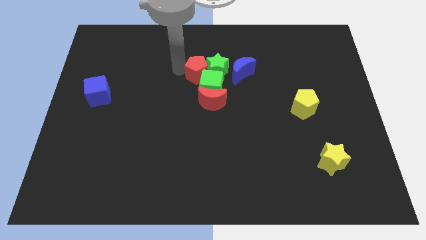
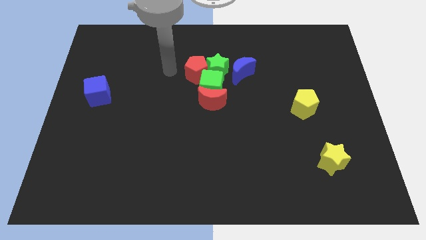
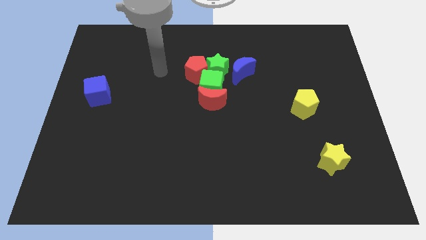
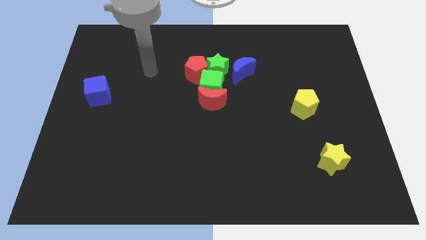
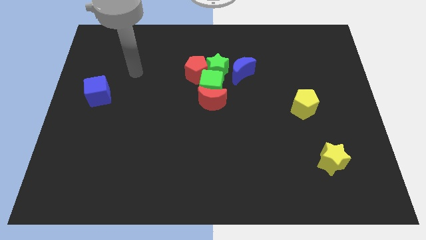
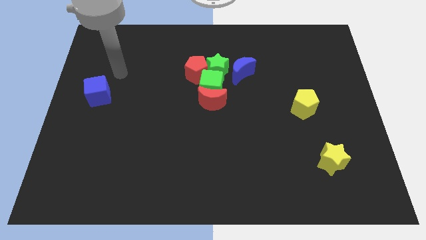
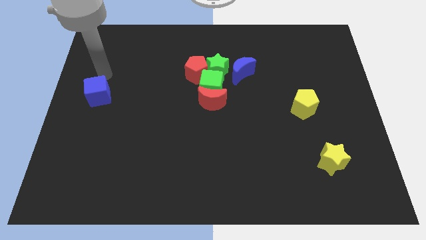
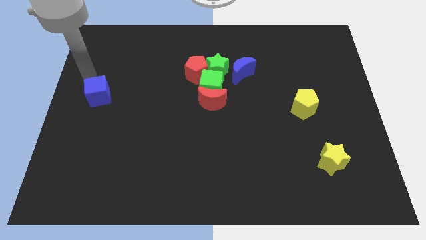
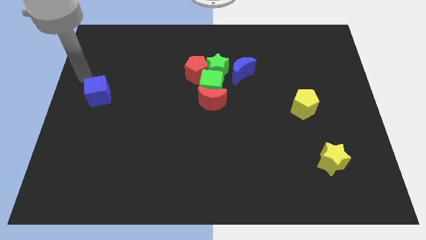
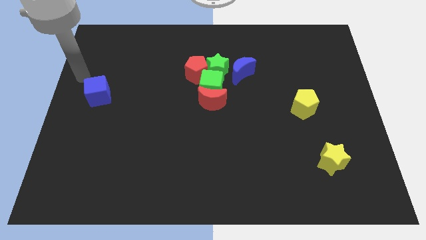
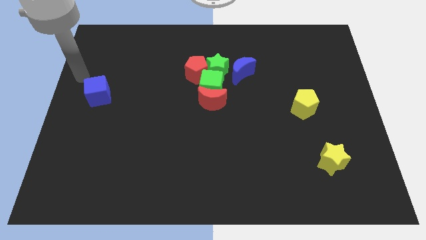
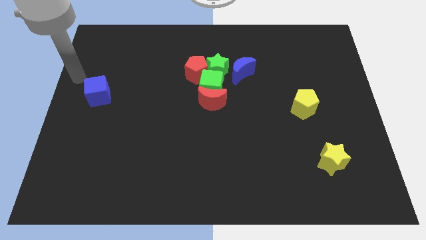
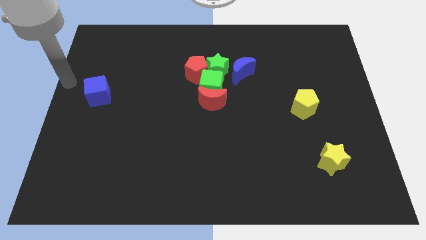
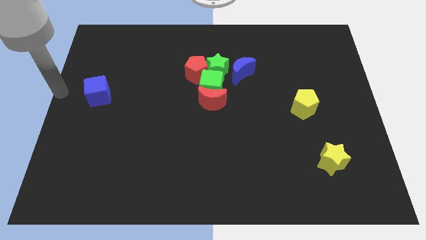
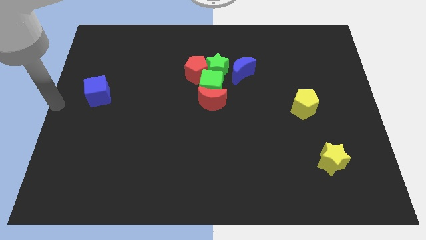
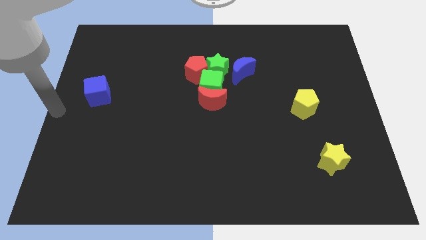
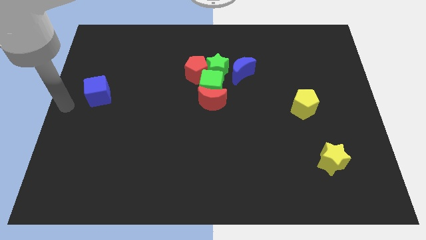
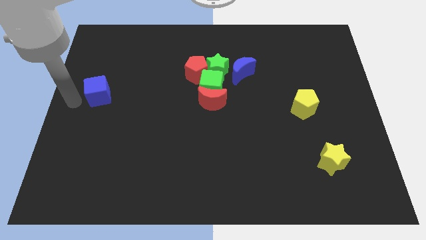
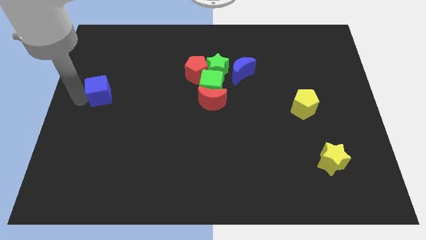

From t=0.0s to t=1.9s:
point your arm at the left side of the blue cube

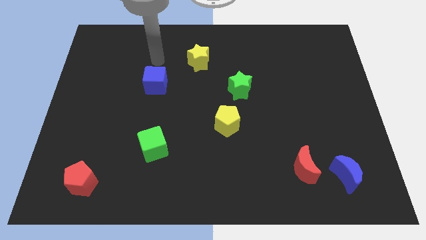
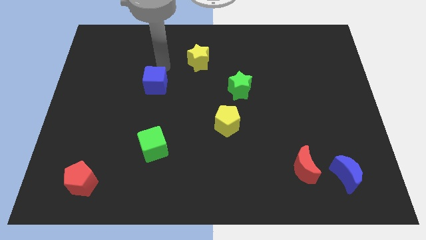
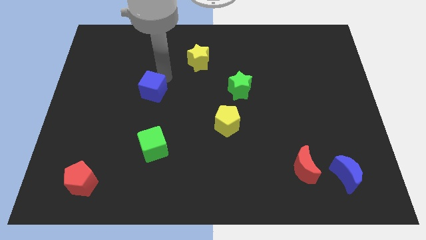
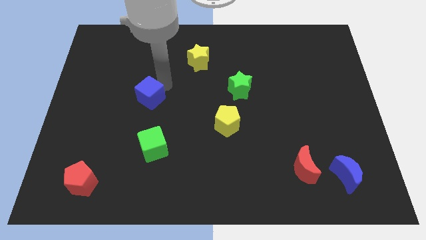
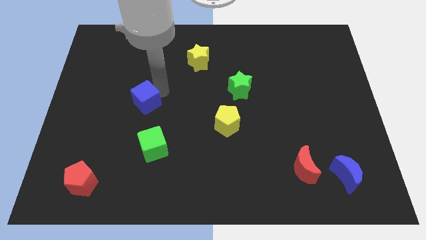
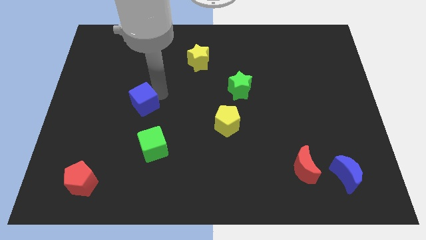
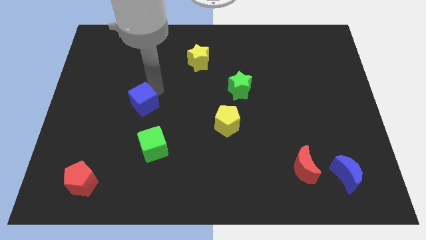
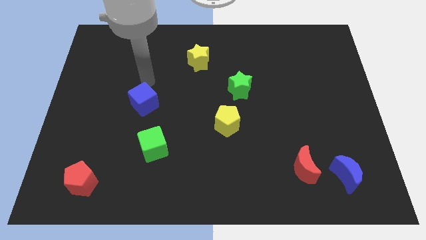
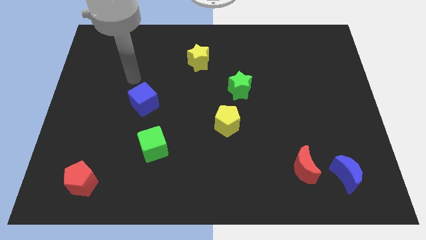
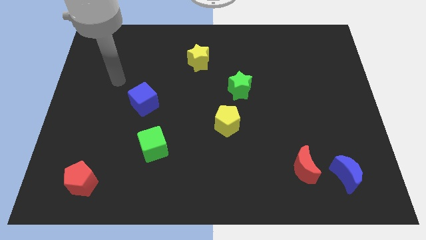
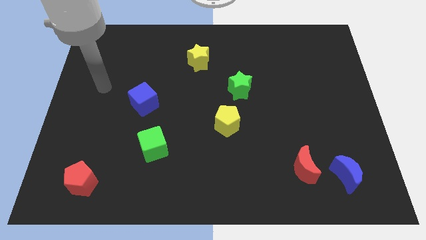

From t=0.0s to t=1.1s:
push blue cube towards green cube

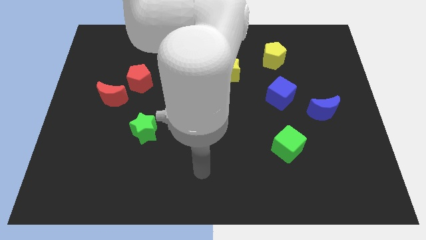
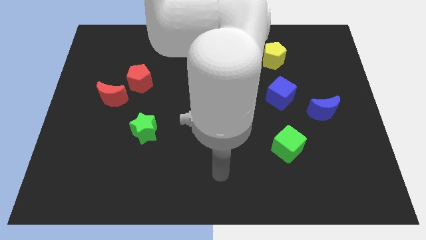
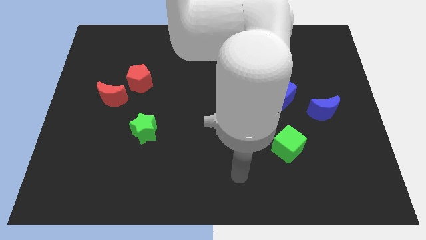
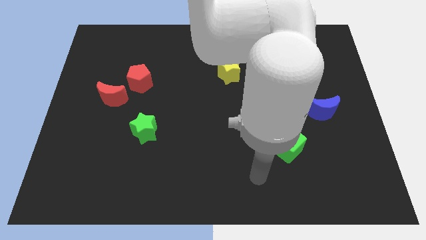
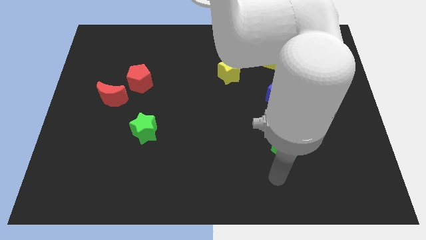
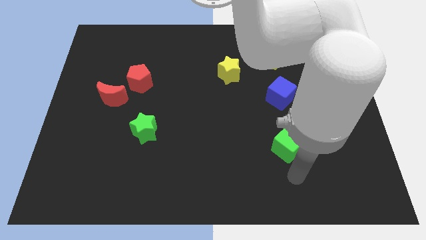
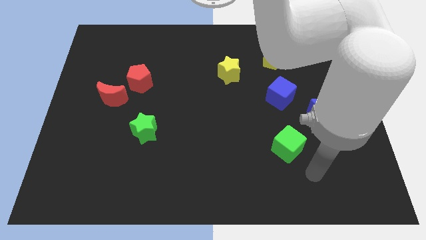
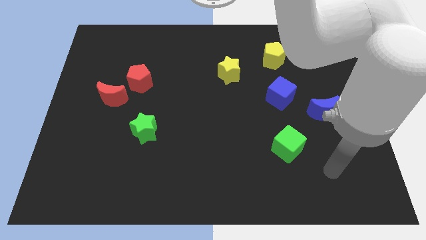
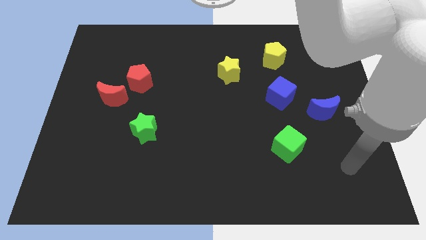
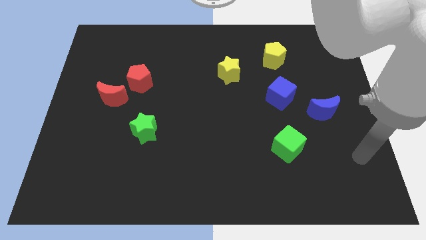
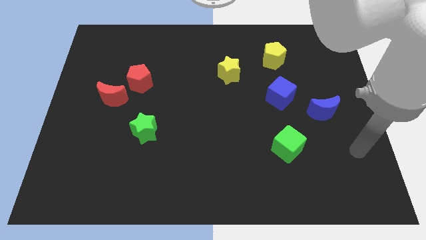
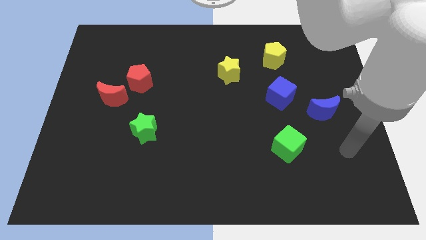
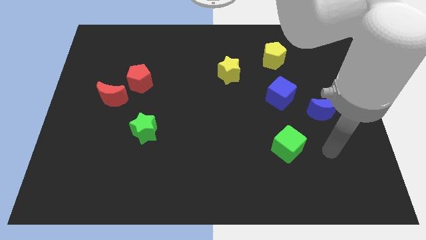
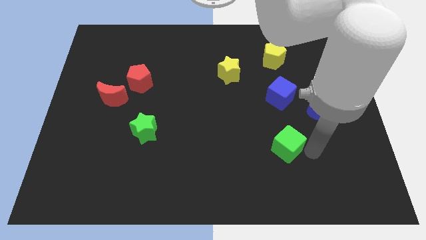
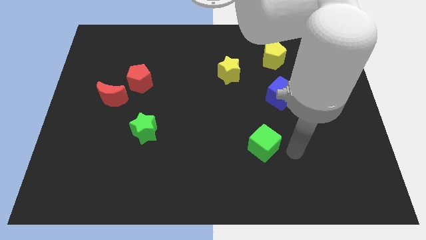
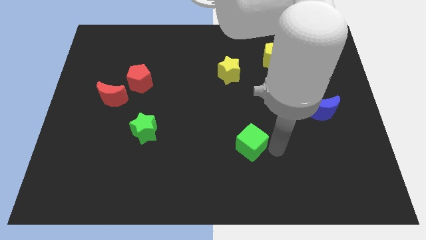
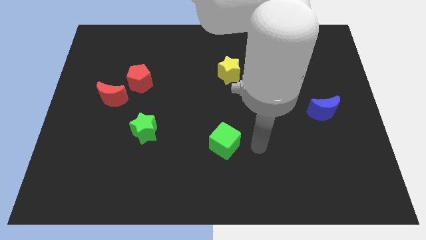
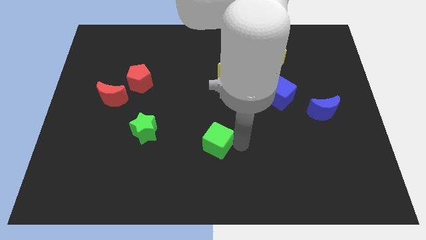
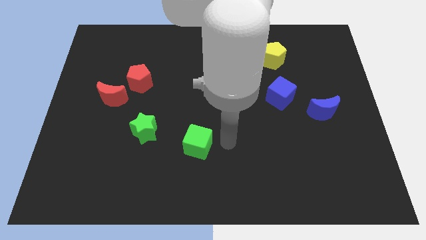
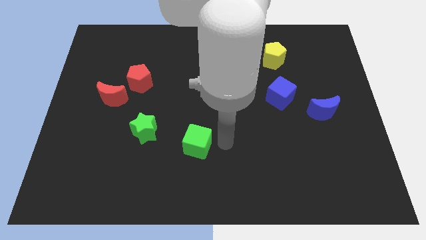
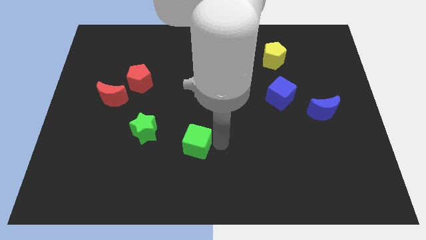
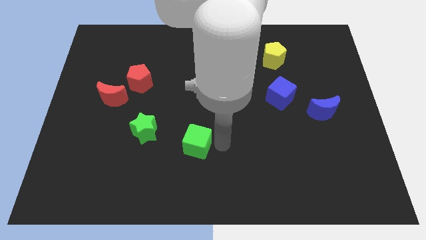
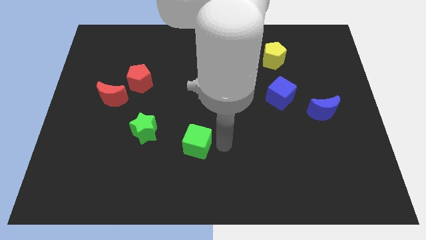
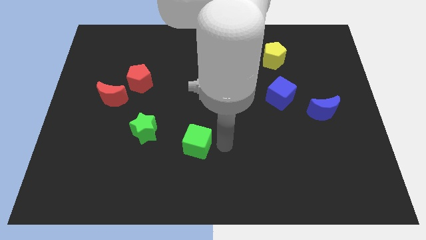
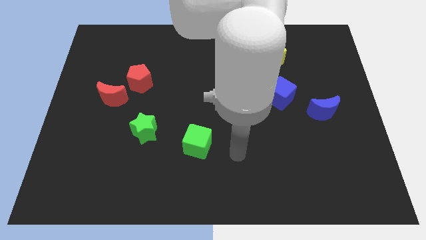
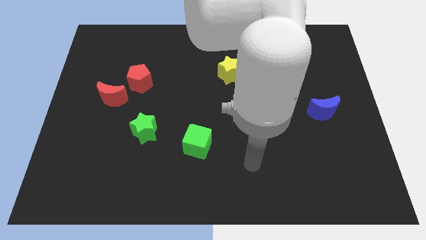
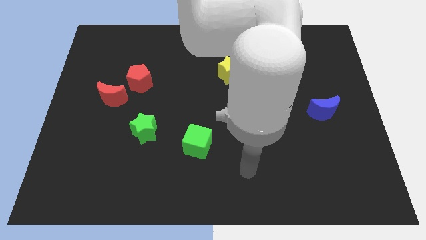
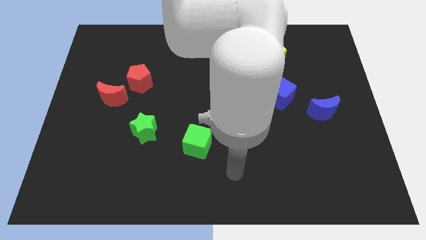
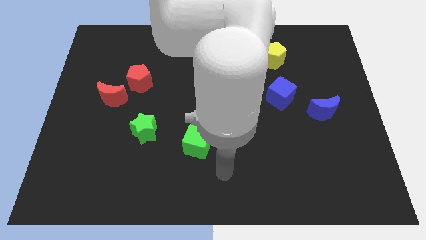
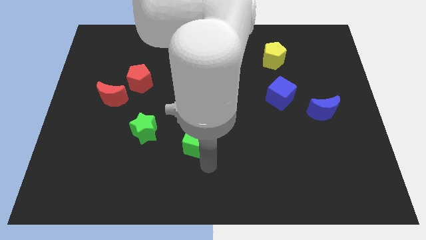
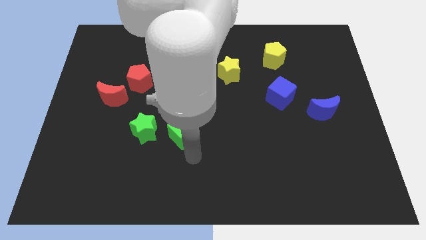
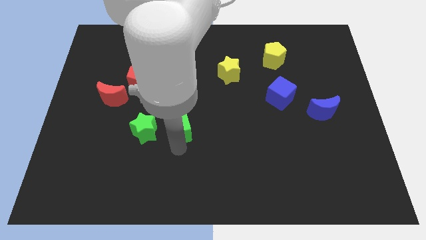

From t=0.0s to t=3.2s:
place green cube to the right of green star

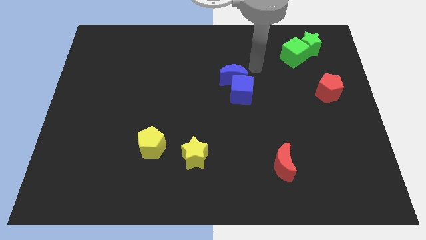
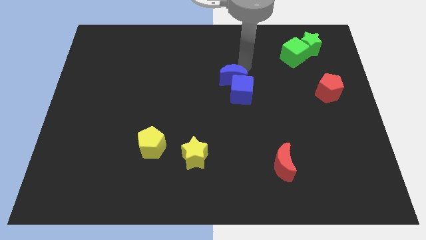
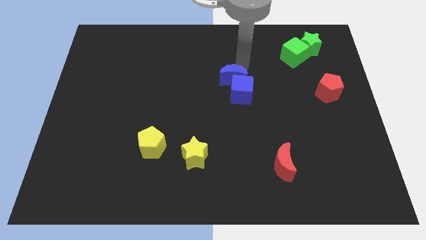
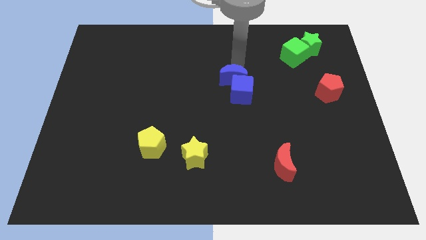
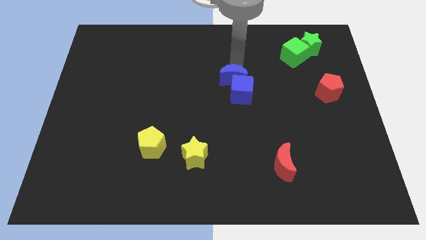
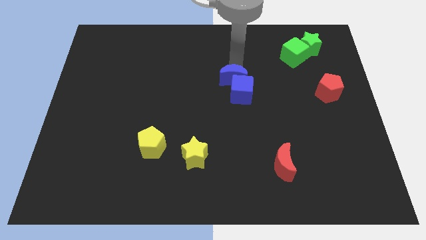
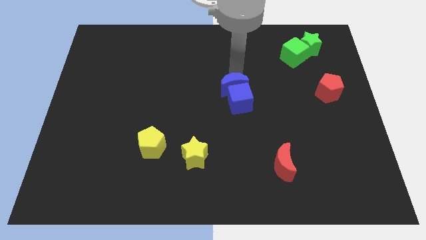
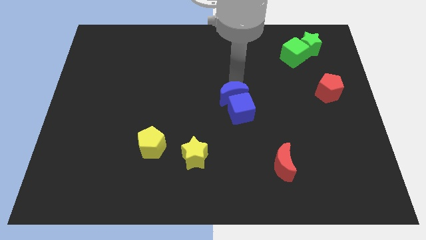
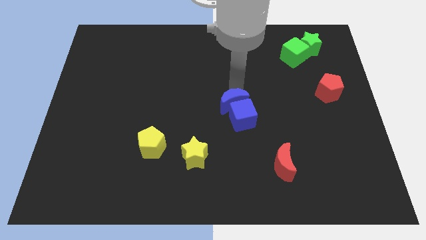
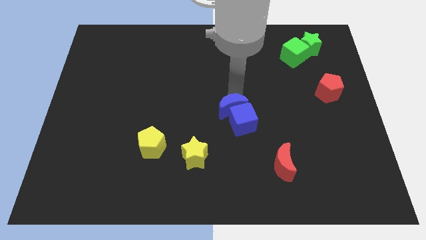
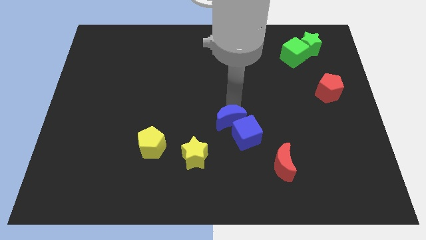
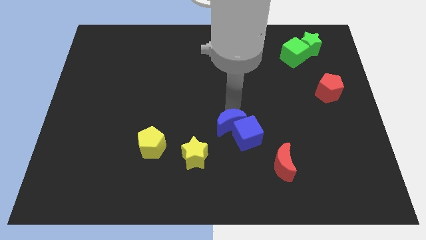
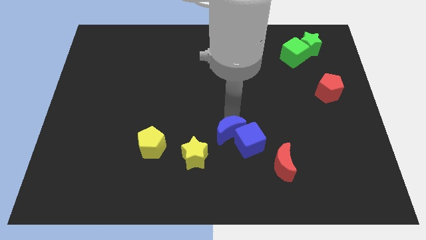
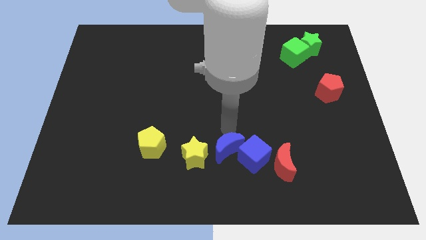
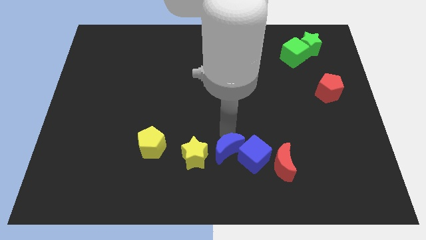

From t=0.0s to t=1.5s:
move the blue blocks towards the bottom side

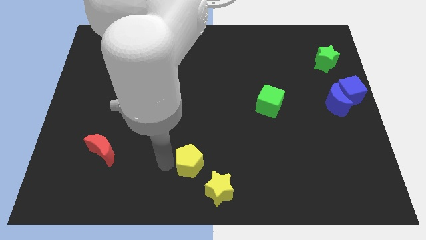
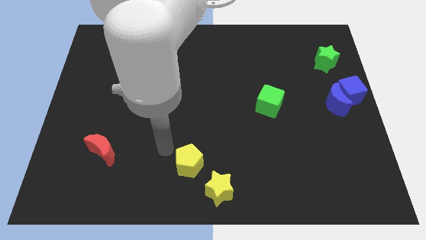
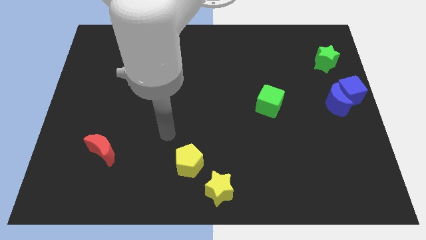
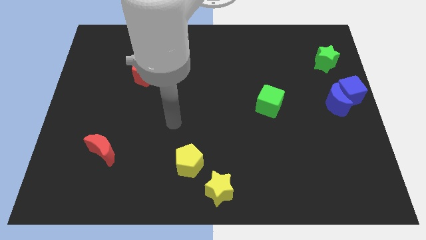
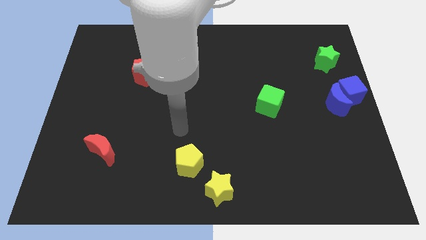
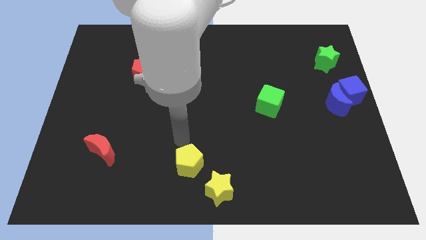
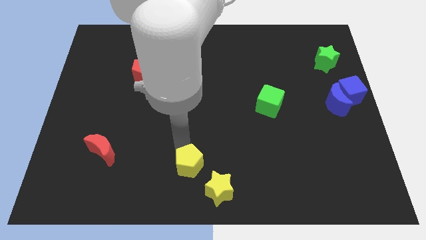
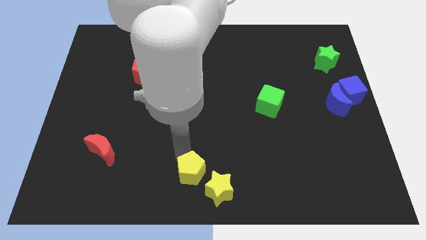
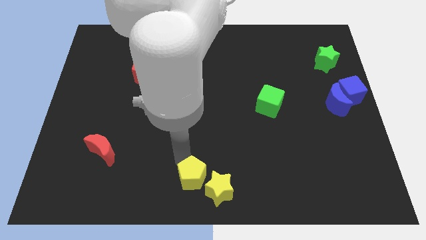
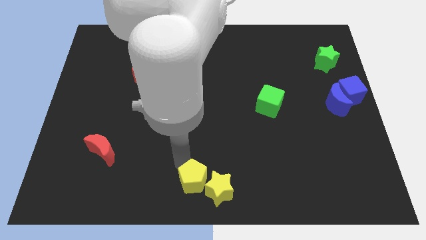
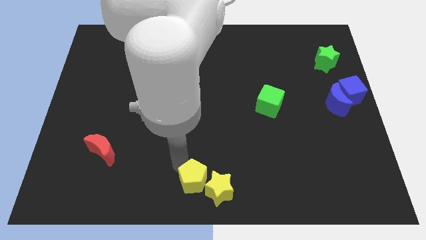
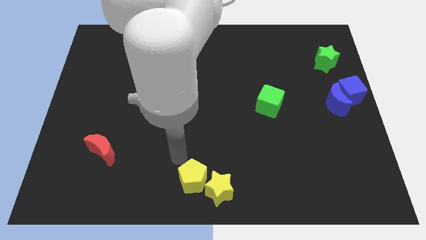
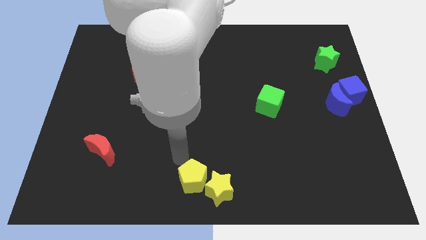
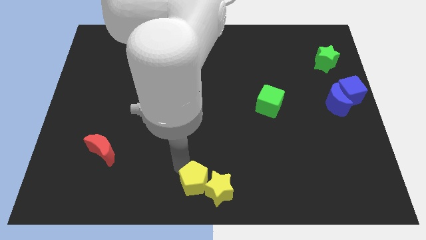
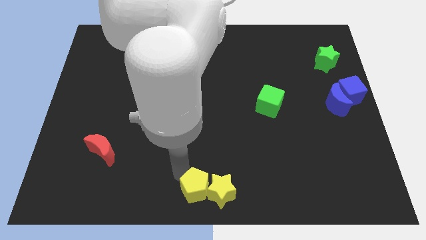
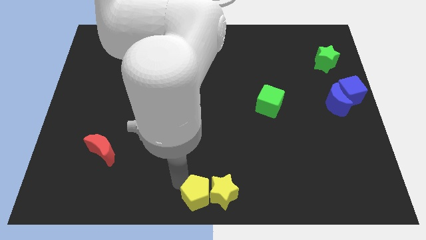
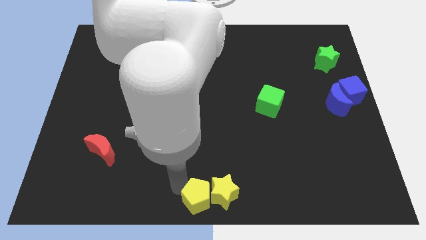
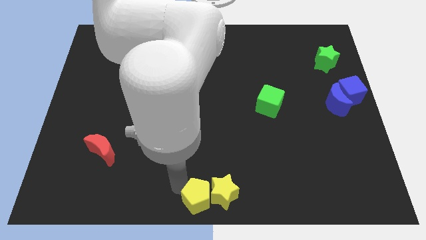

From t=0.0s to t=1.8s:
drag the yellow pentagon into yellow star
